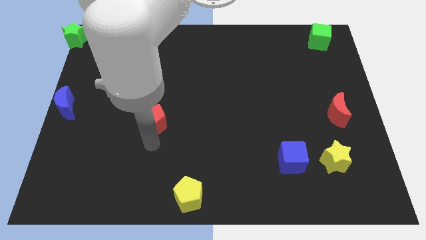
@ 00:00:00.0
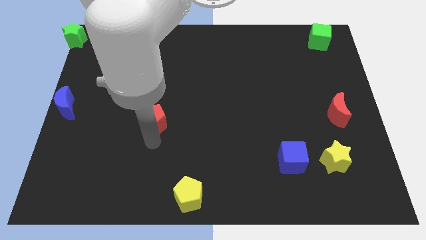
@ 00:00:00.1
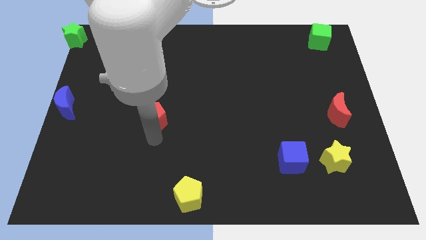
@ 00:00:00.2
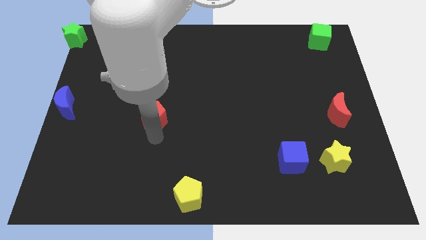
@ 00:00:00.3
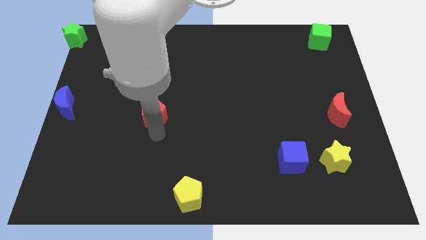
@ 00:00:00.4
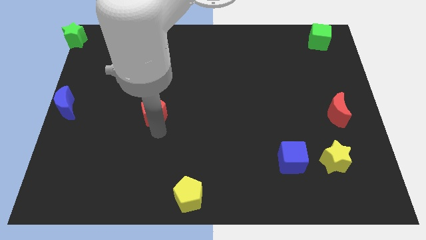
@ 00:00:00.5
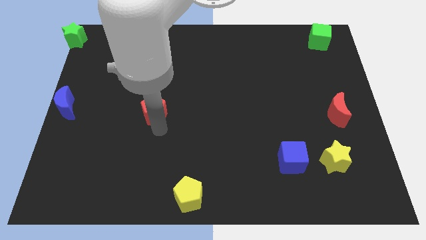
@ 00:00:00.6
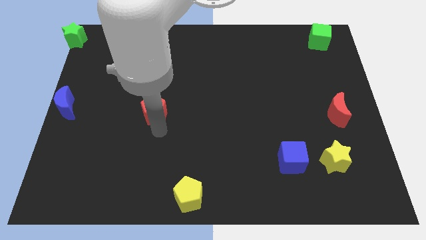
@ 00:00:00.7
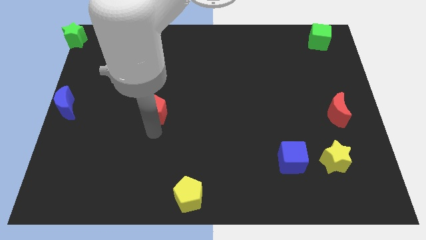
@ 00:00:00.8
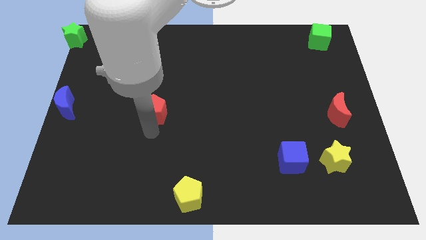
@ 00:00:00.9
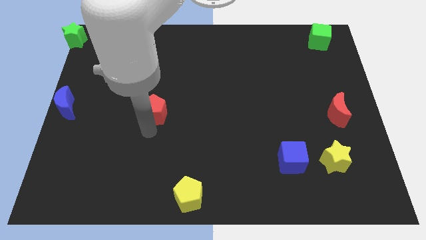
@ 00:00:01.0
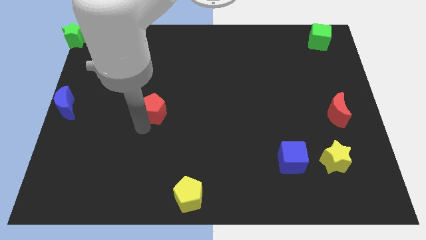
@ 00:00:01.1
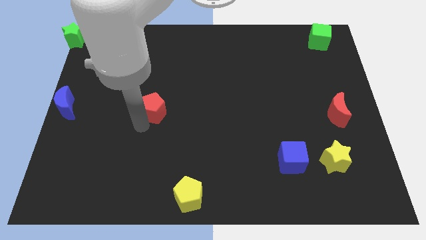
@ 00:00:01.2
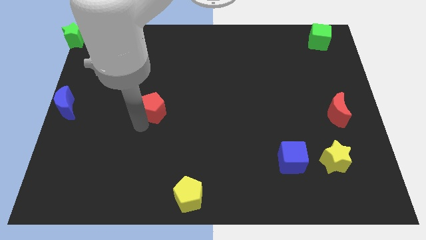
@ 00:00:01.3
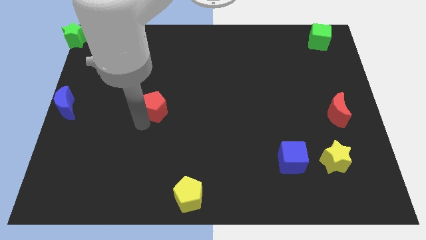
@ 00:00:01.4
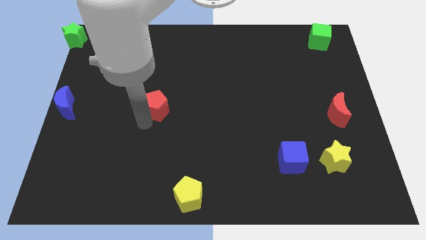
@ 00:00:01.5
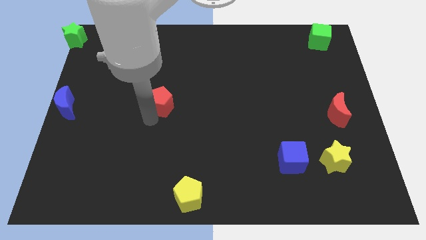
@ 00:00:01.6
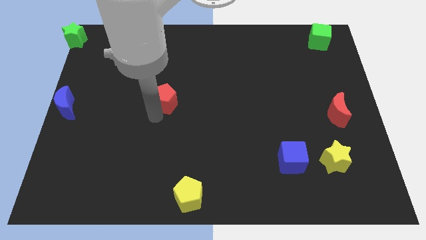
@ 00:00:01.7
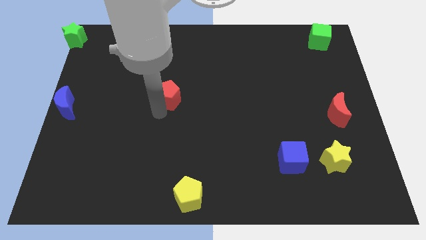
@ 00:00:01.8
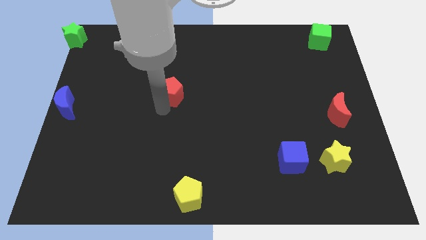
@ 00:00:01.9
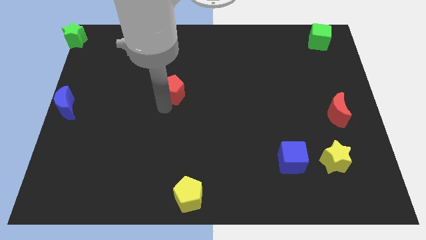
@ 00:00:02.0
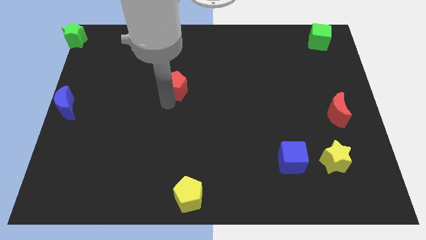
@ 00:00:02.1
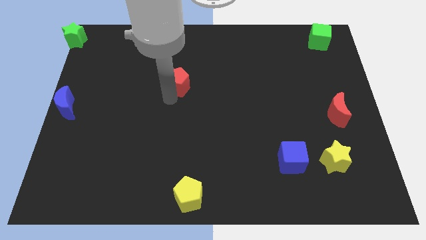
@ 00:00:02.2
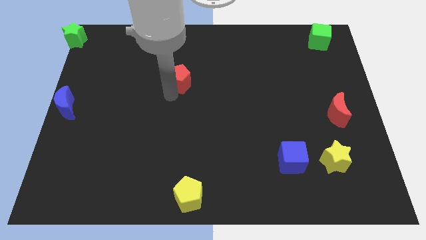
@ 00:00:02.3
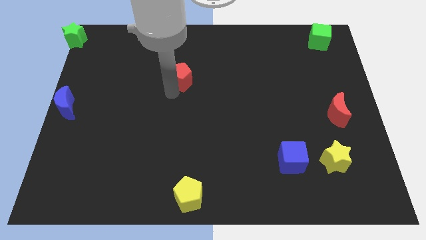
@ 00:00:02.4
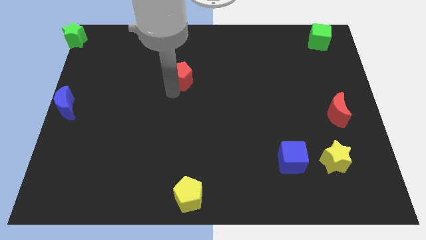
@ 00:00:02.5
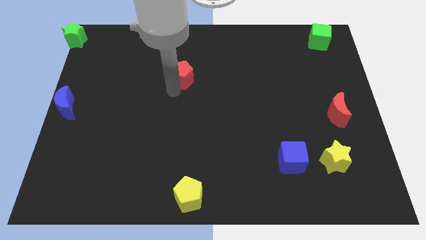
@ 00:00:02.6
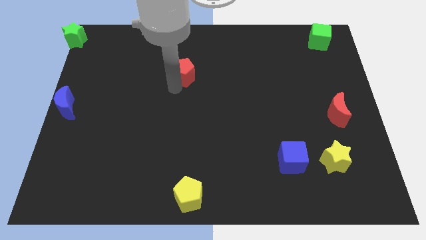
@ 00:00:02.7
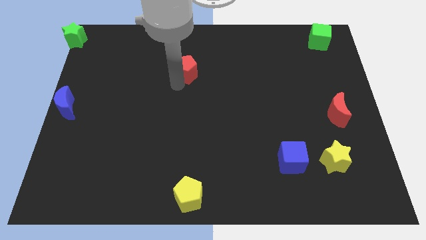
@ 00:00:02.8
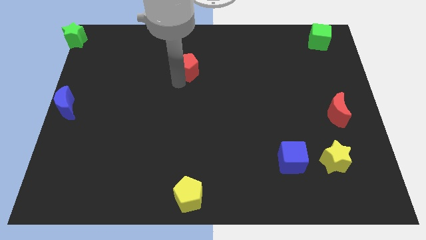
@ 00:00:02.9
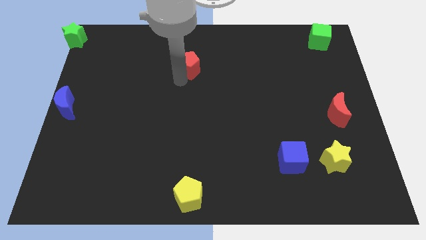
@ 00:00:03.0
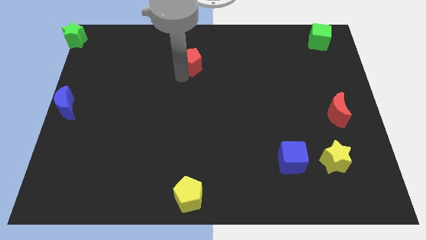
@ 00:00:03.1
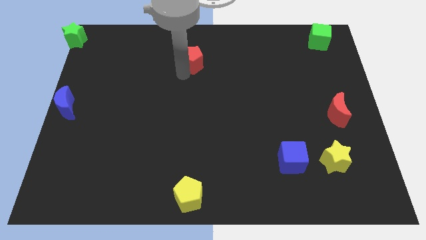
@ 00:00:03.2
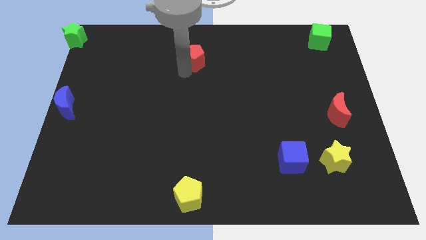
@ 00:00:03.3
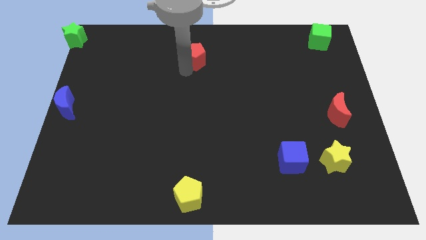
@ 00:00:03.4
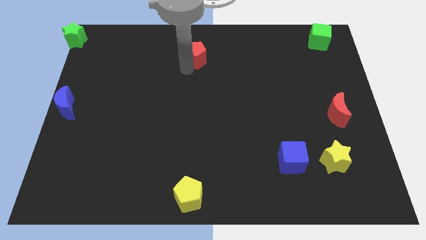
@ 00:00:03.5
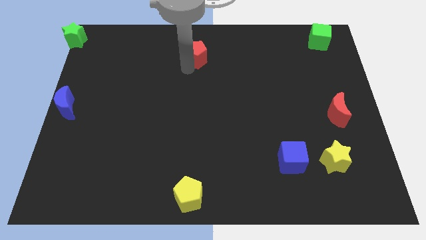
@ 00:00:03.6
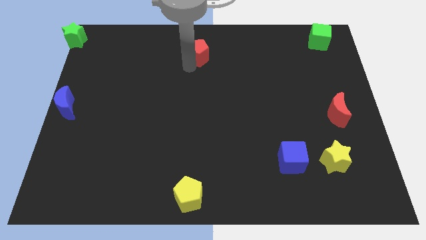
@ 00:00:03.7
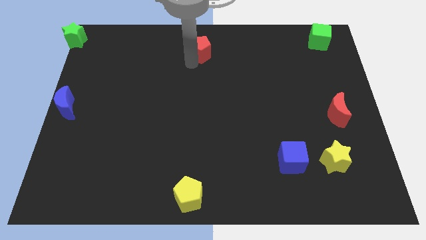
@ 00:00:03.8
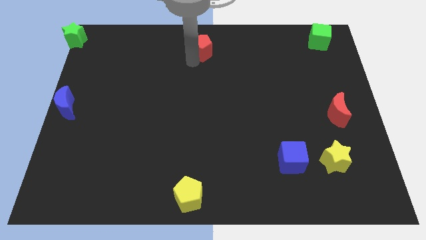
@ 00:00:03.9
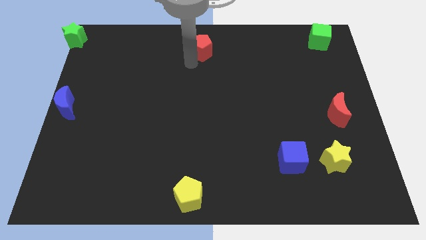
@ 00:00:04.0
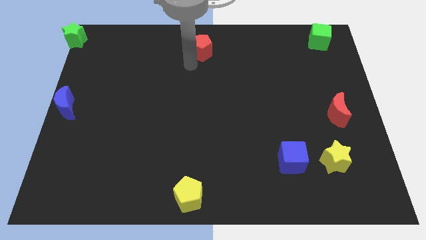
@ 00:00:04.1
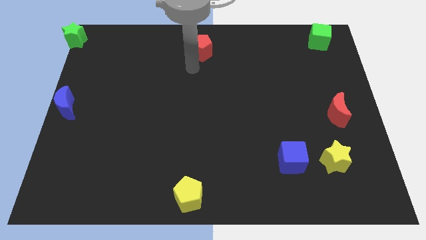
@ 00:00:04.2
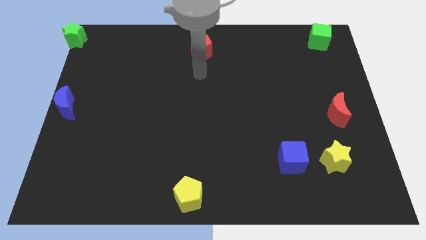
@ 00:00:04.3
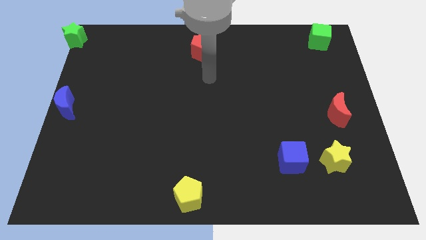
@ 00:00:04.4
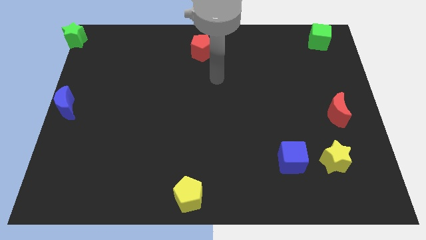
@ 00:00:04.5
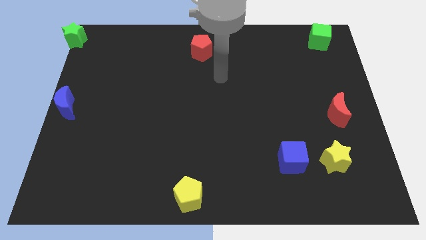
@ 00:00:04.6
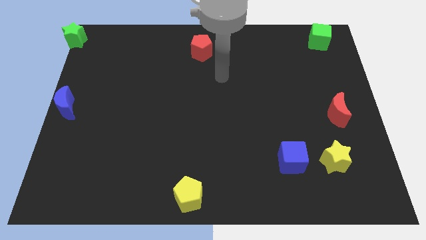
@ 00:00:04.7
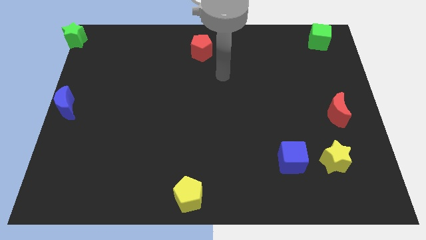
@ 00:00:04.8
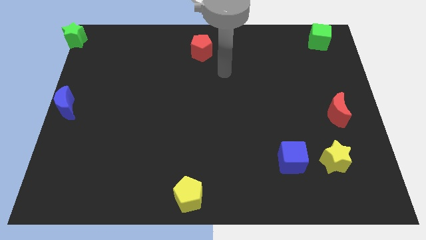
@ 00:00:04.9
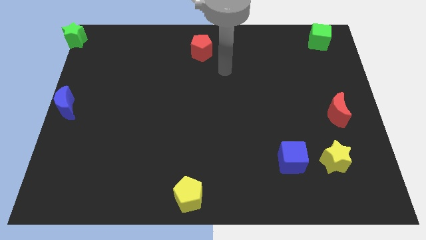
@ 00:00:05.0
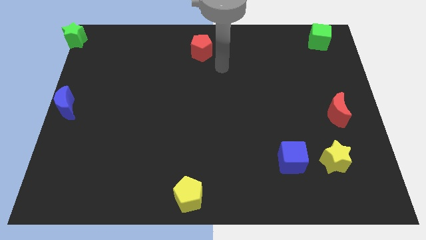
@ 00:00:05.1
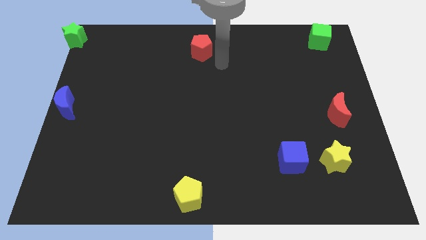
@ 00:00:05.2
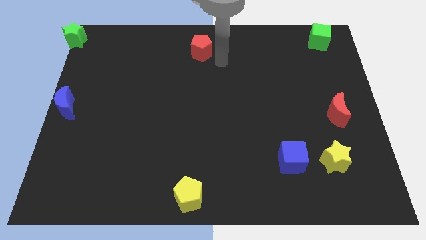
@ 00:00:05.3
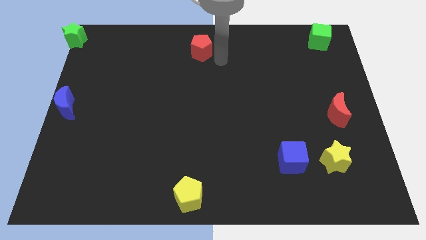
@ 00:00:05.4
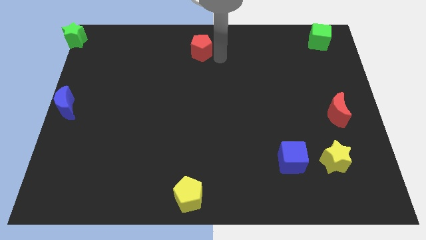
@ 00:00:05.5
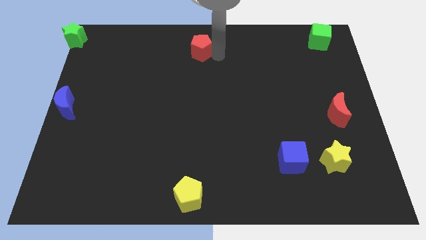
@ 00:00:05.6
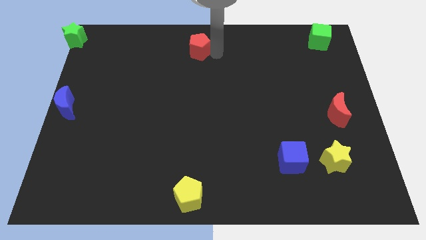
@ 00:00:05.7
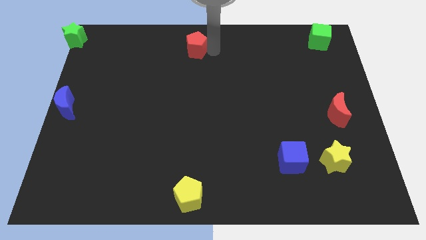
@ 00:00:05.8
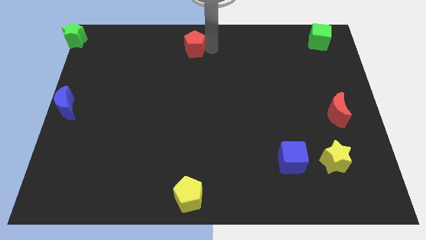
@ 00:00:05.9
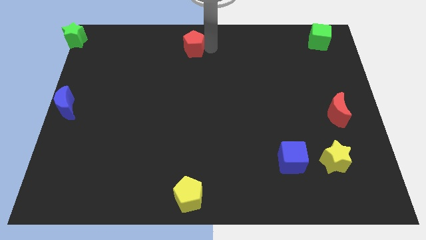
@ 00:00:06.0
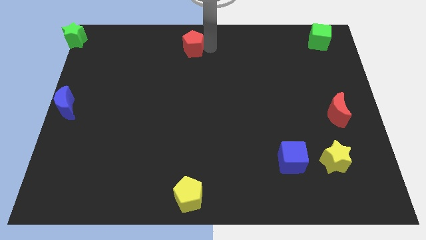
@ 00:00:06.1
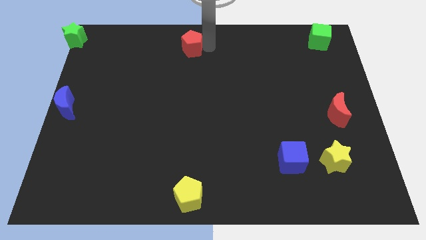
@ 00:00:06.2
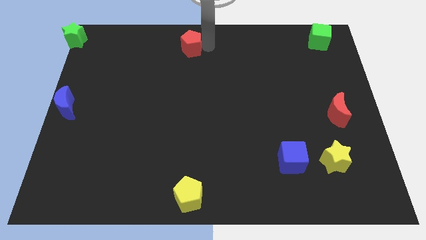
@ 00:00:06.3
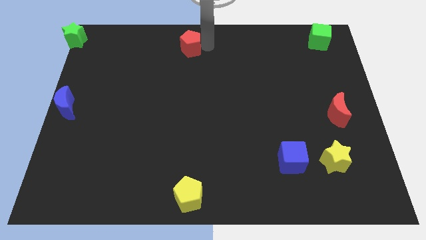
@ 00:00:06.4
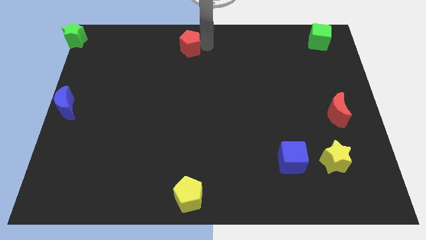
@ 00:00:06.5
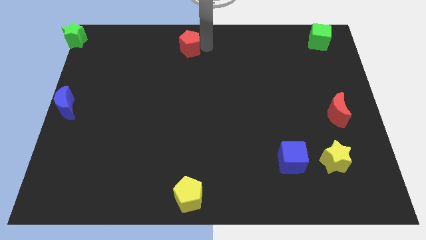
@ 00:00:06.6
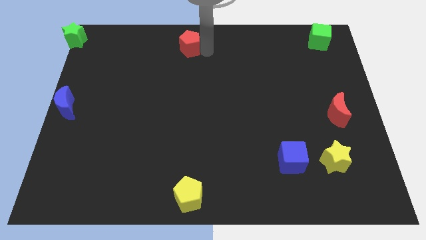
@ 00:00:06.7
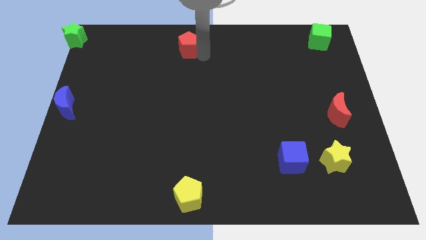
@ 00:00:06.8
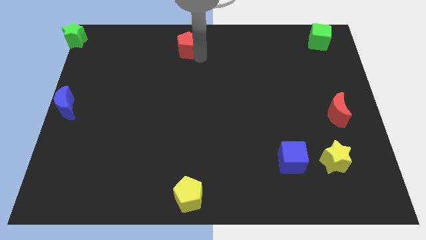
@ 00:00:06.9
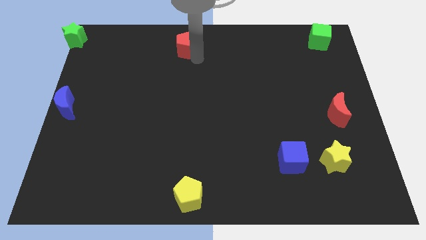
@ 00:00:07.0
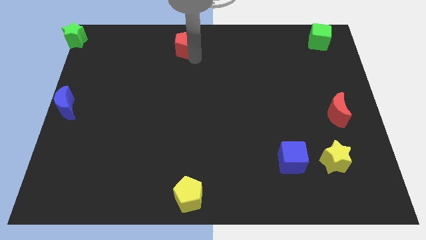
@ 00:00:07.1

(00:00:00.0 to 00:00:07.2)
push the red pentagon to the top of the board

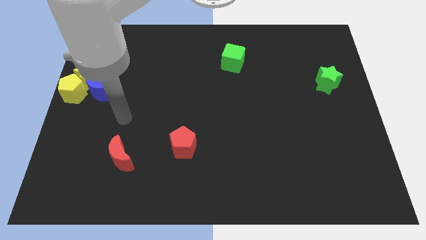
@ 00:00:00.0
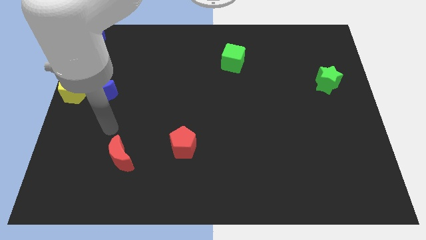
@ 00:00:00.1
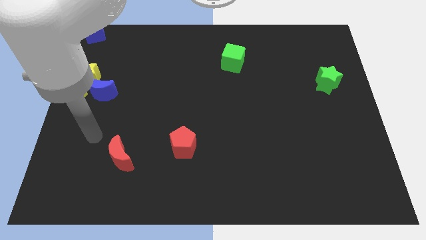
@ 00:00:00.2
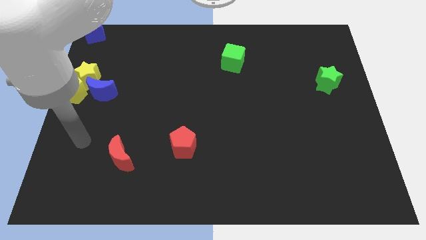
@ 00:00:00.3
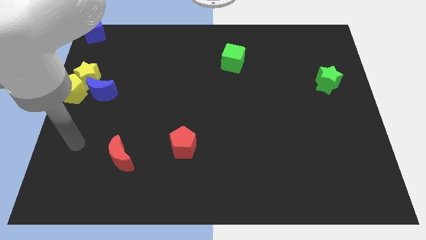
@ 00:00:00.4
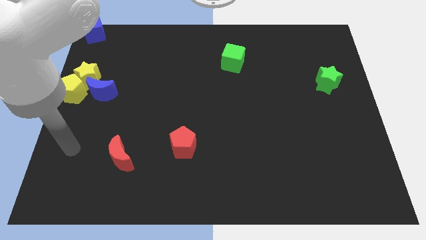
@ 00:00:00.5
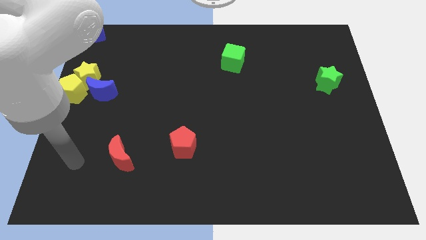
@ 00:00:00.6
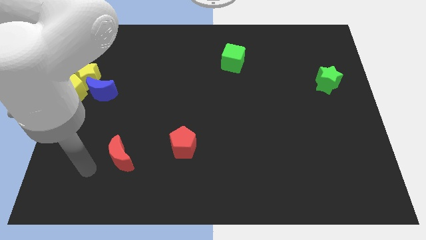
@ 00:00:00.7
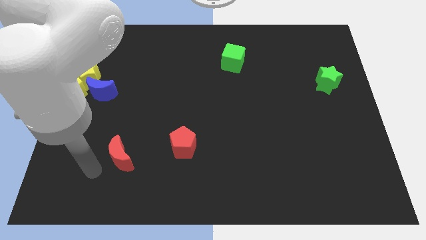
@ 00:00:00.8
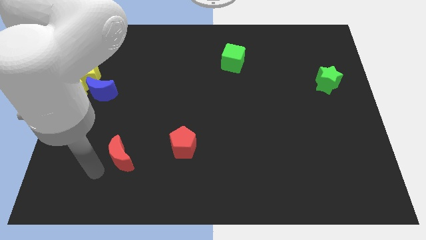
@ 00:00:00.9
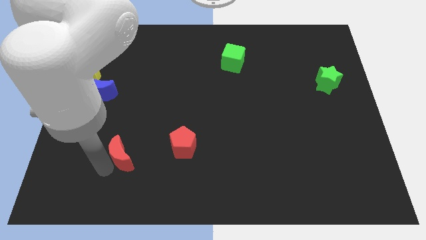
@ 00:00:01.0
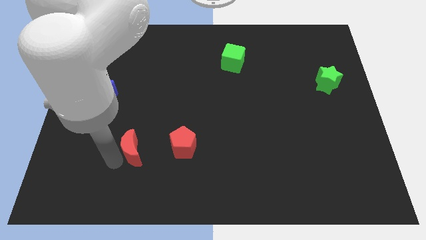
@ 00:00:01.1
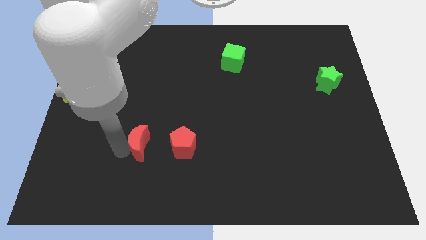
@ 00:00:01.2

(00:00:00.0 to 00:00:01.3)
slightly move the red moon towards the red pentagon

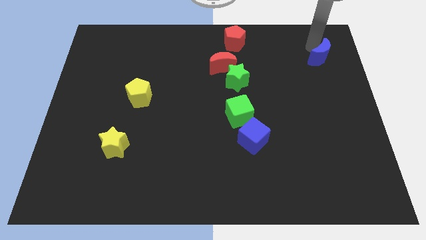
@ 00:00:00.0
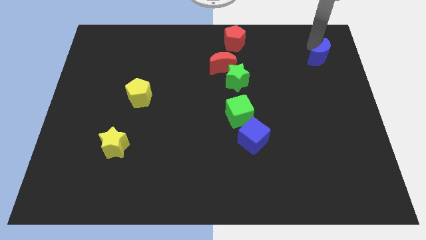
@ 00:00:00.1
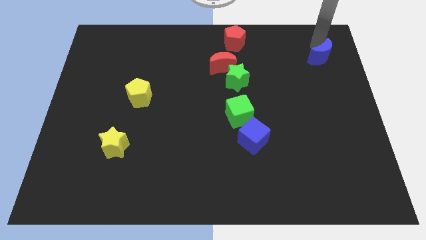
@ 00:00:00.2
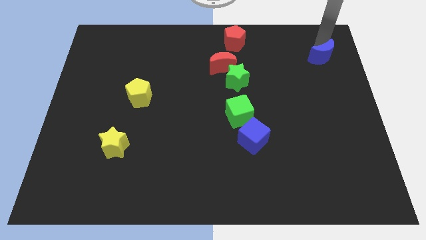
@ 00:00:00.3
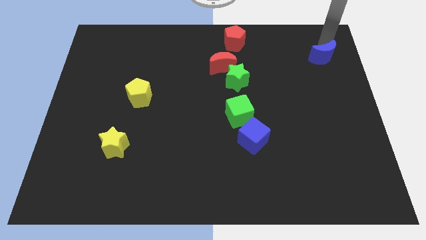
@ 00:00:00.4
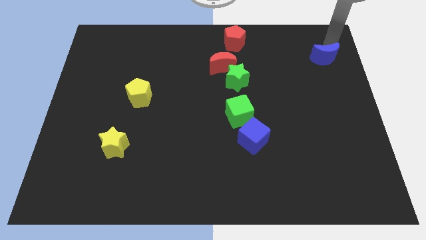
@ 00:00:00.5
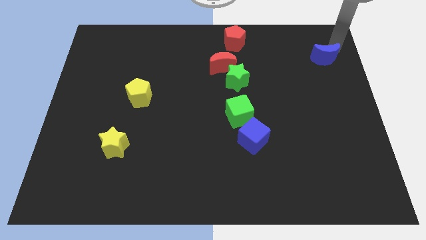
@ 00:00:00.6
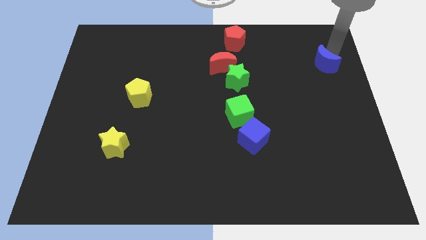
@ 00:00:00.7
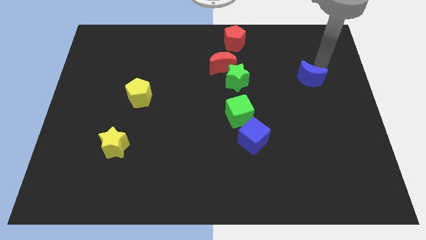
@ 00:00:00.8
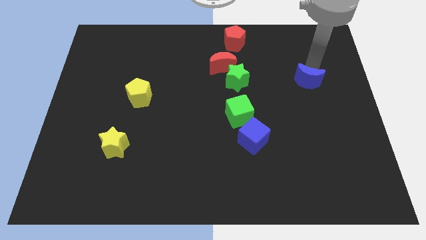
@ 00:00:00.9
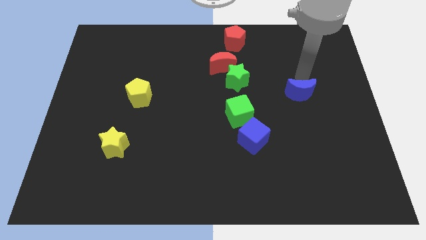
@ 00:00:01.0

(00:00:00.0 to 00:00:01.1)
place the blue moon parallel to green star
